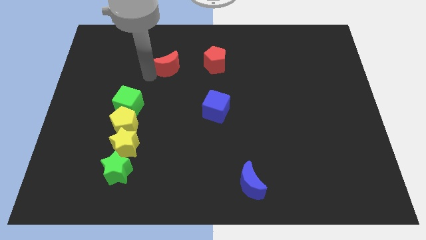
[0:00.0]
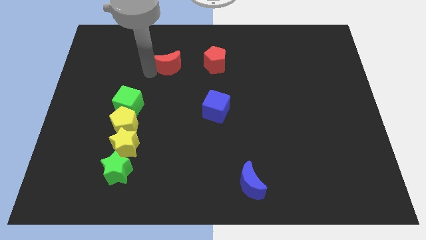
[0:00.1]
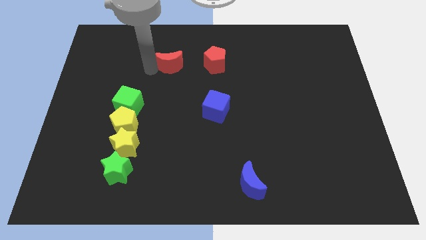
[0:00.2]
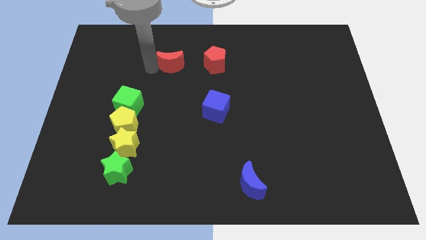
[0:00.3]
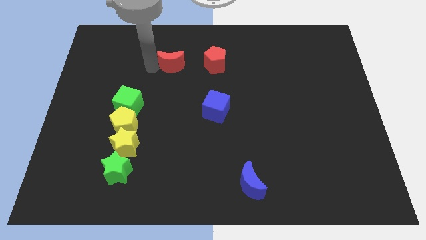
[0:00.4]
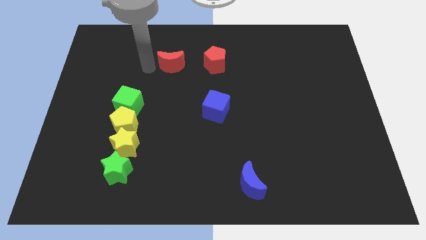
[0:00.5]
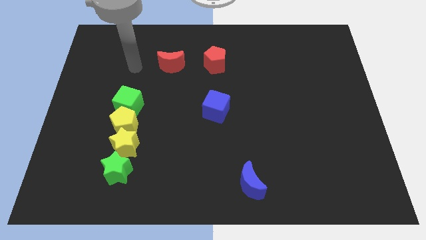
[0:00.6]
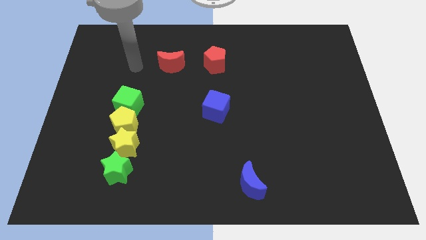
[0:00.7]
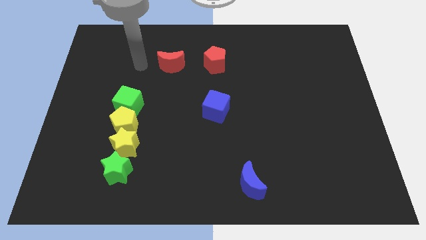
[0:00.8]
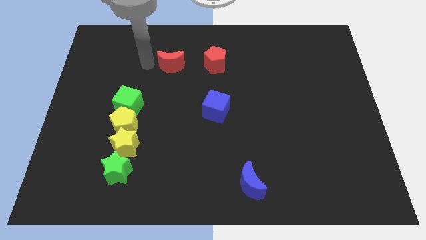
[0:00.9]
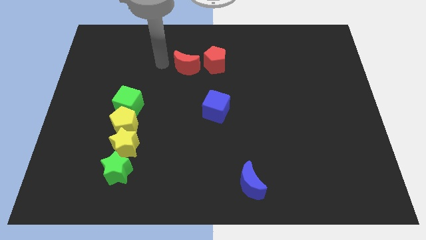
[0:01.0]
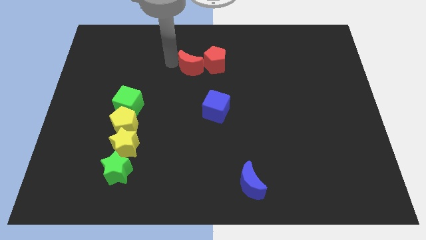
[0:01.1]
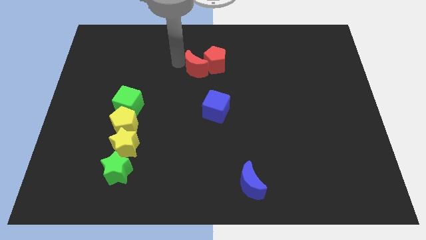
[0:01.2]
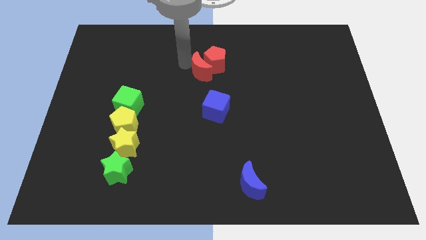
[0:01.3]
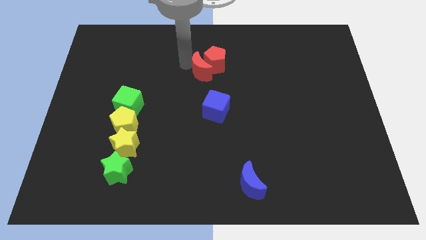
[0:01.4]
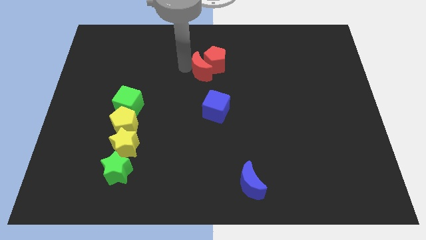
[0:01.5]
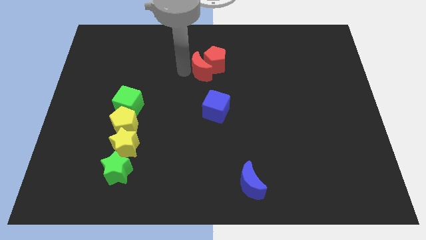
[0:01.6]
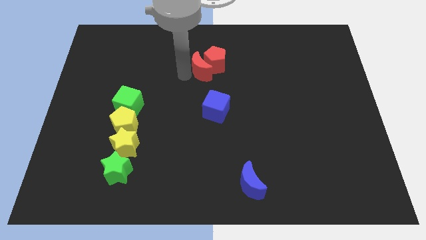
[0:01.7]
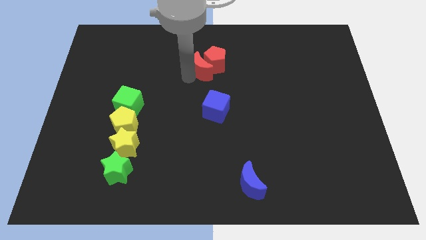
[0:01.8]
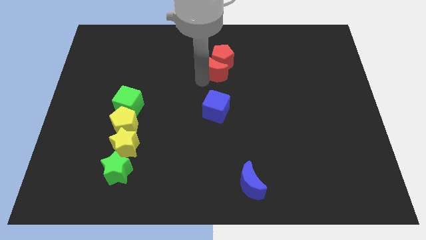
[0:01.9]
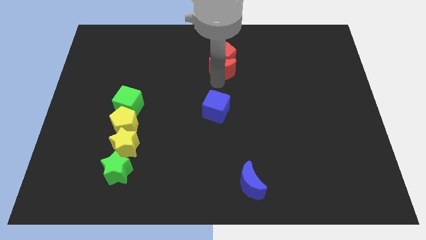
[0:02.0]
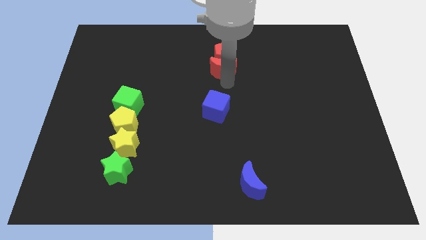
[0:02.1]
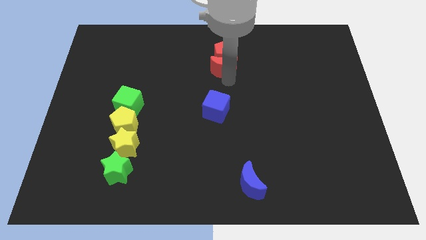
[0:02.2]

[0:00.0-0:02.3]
push the red crescent into red pentagon

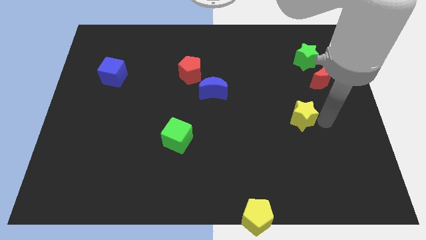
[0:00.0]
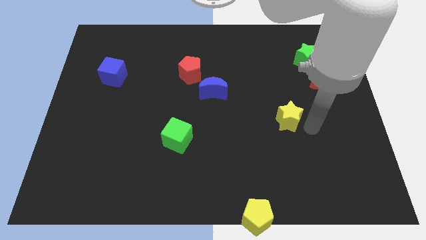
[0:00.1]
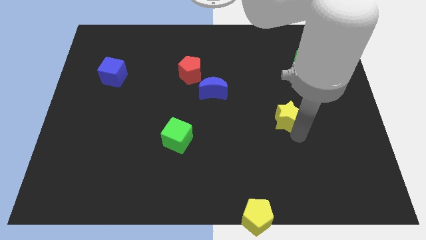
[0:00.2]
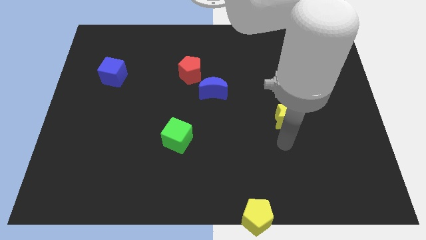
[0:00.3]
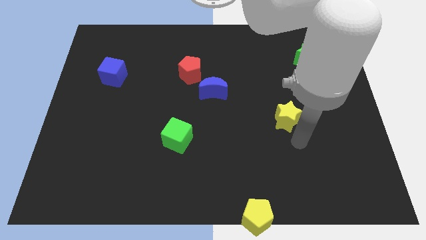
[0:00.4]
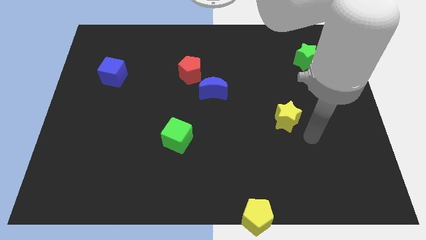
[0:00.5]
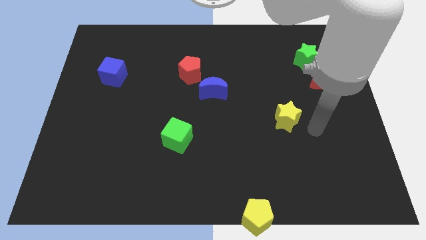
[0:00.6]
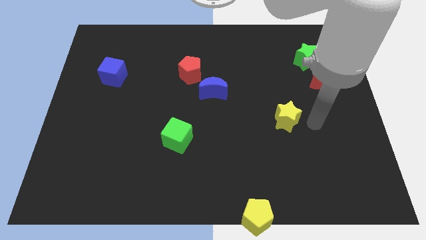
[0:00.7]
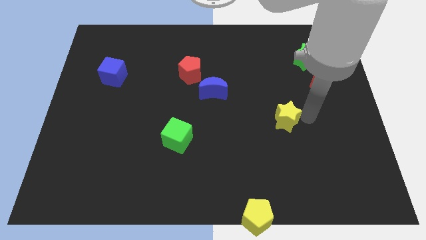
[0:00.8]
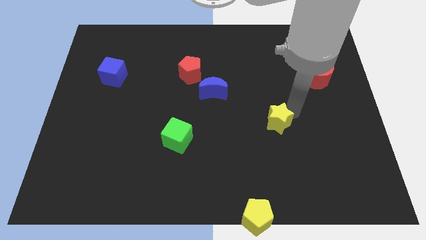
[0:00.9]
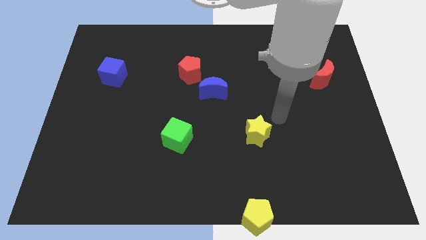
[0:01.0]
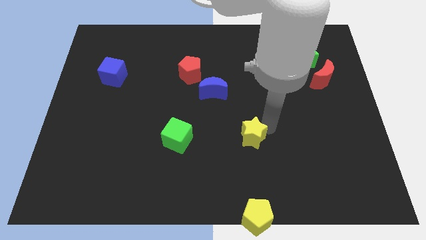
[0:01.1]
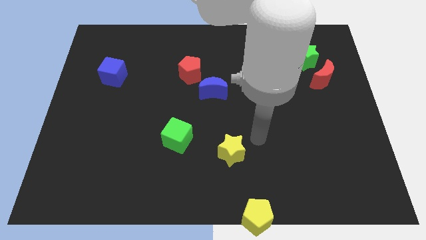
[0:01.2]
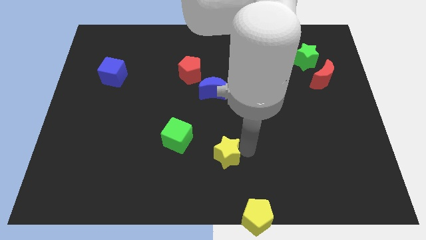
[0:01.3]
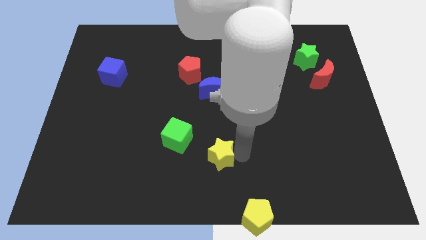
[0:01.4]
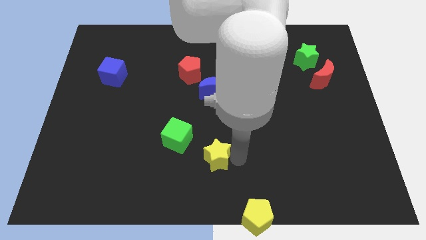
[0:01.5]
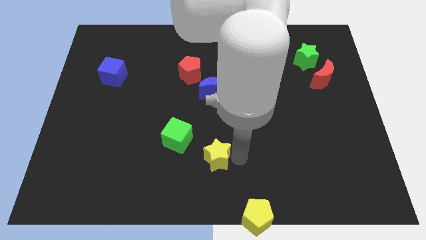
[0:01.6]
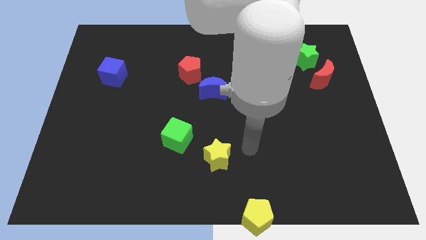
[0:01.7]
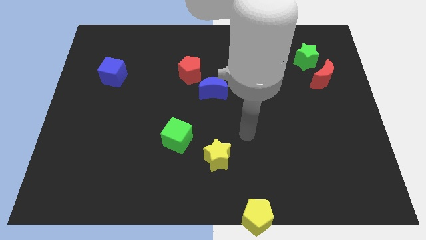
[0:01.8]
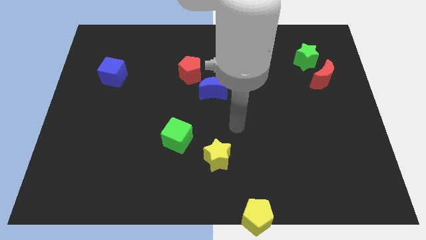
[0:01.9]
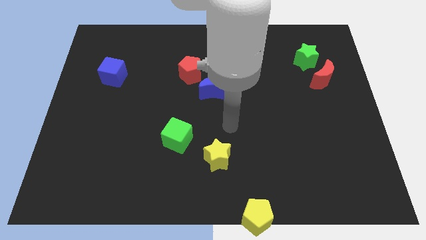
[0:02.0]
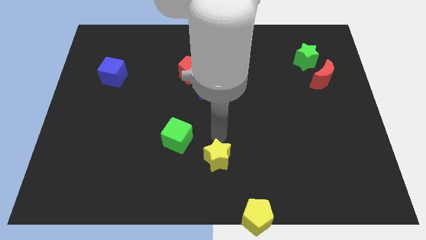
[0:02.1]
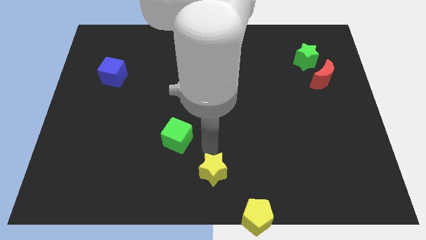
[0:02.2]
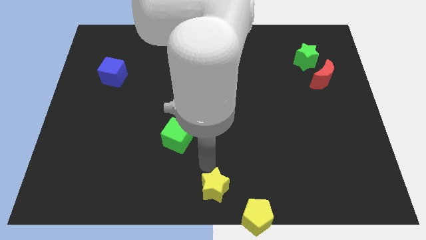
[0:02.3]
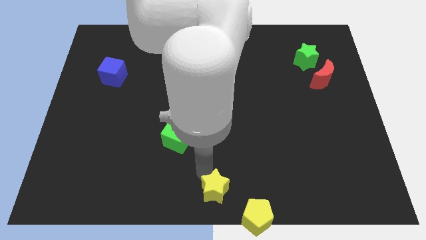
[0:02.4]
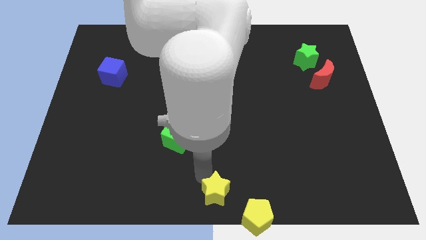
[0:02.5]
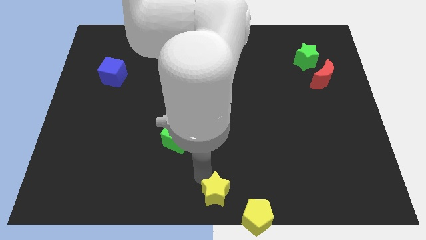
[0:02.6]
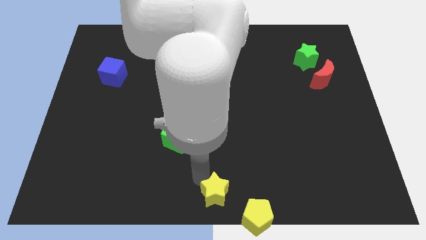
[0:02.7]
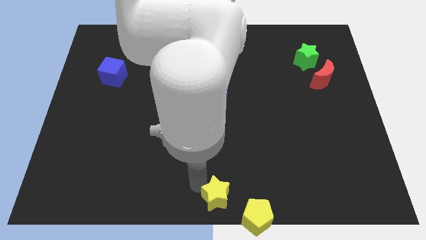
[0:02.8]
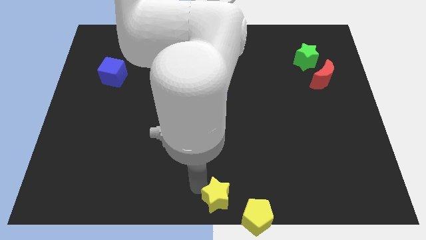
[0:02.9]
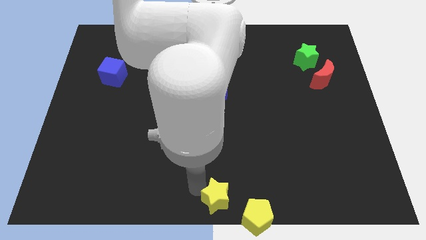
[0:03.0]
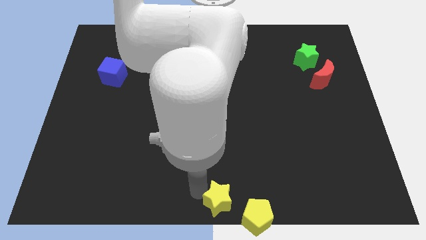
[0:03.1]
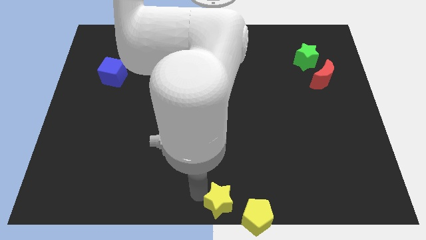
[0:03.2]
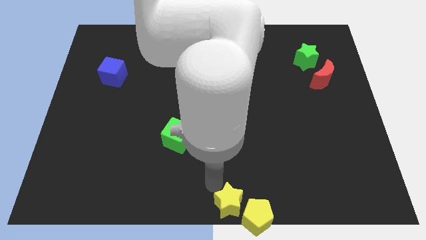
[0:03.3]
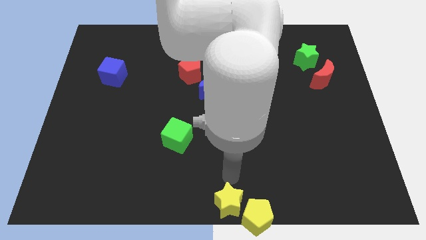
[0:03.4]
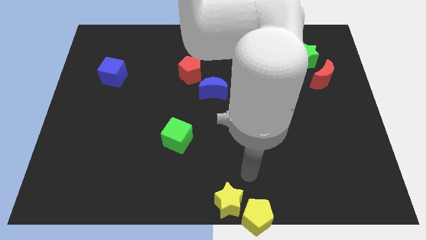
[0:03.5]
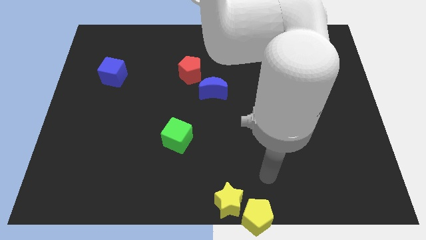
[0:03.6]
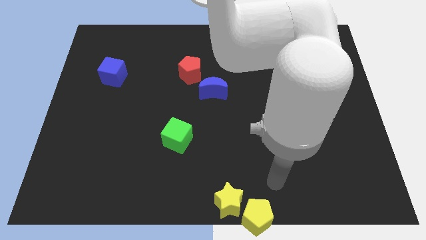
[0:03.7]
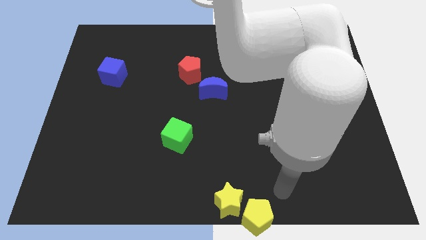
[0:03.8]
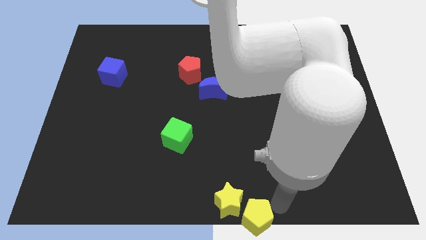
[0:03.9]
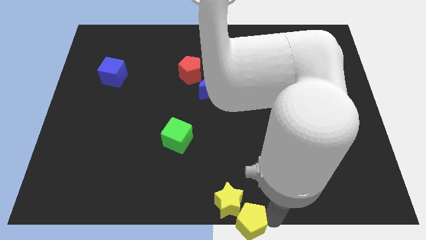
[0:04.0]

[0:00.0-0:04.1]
slide yellow star into yellow pentagon

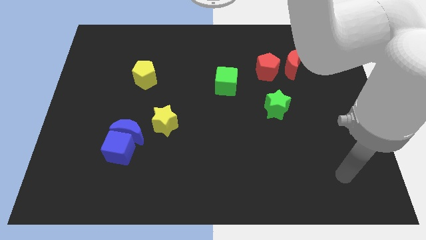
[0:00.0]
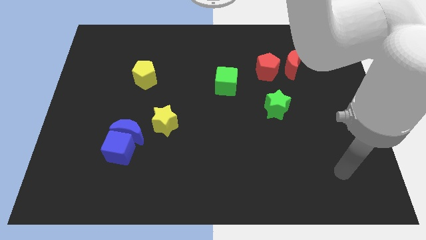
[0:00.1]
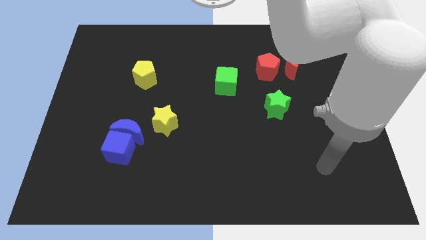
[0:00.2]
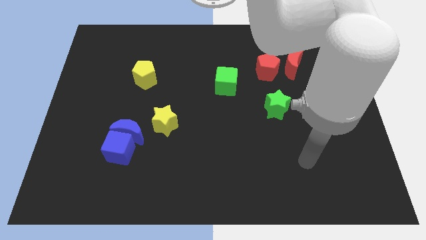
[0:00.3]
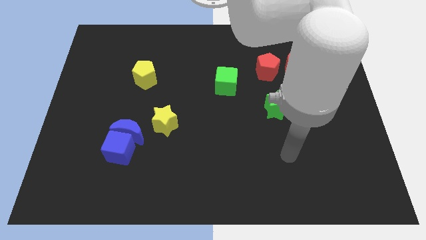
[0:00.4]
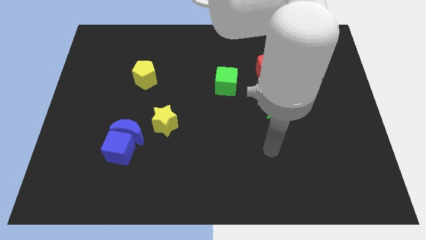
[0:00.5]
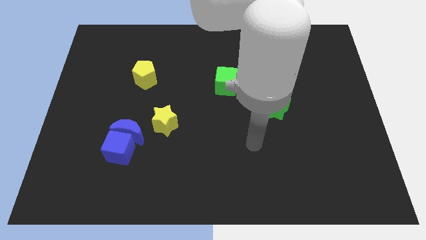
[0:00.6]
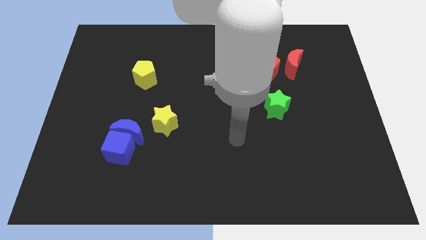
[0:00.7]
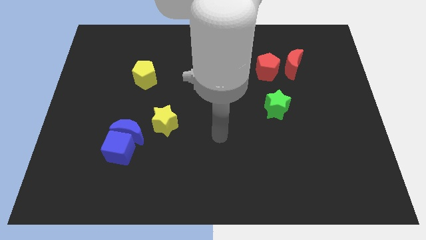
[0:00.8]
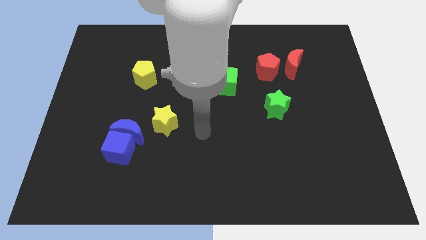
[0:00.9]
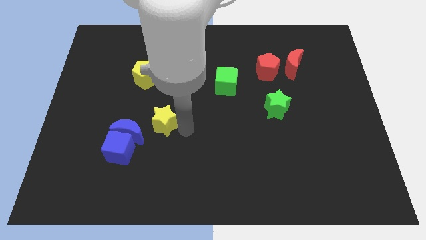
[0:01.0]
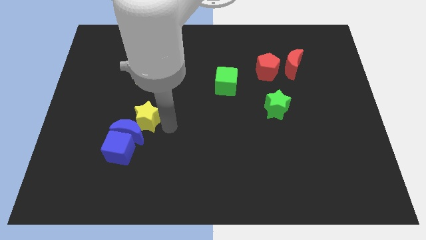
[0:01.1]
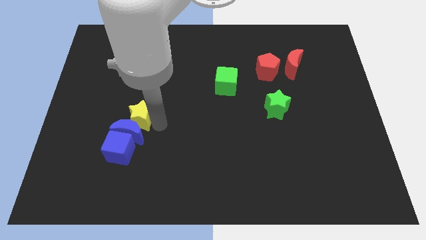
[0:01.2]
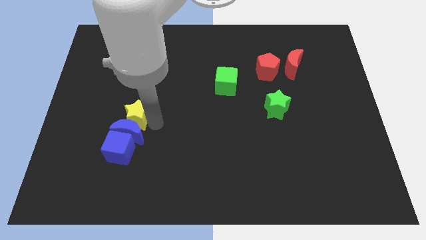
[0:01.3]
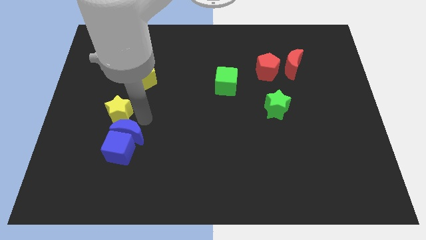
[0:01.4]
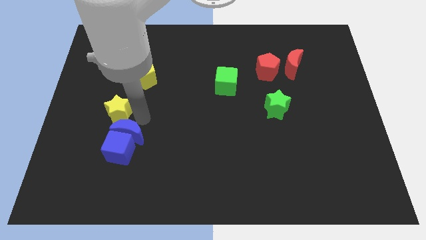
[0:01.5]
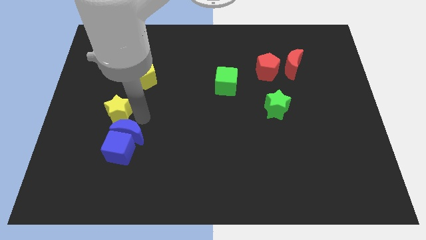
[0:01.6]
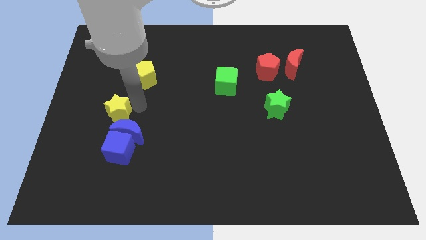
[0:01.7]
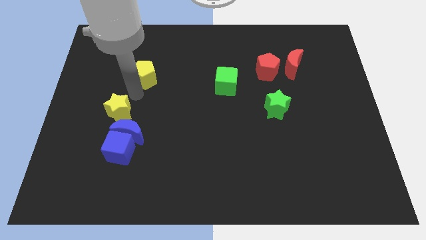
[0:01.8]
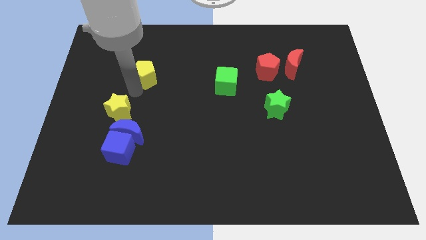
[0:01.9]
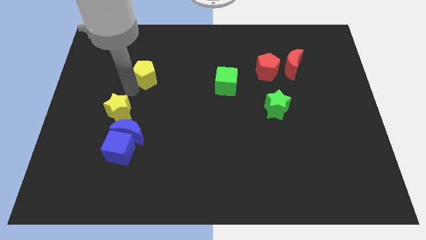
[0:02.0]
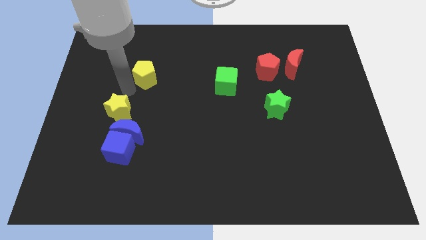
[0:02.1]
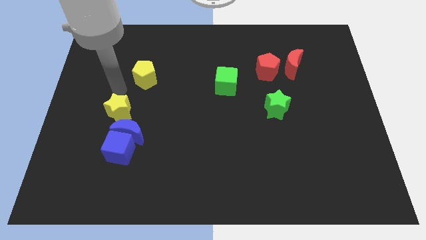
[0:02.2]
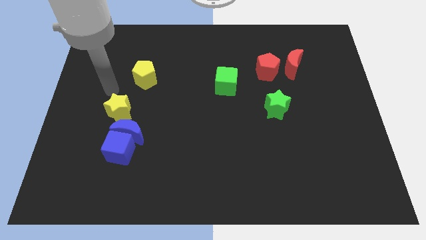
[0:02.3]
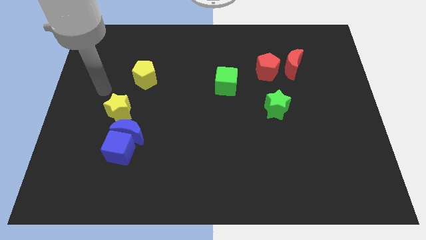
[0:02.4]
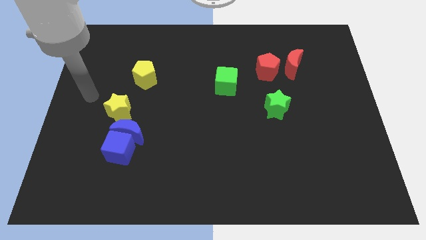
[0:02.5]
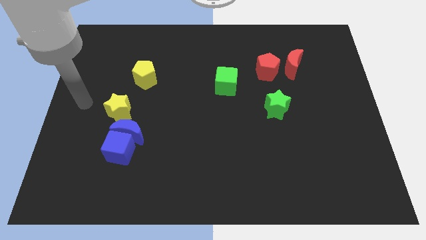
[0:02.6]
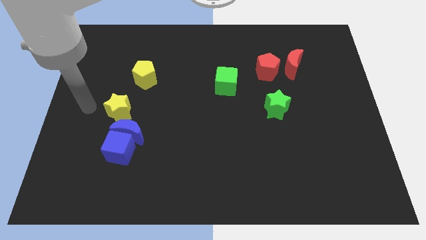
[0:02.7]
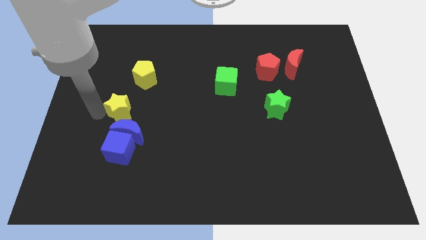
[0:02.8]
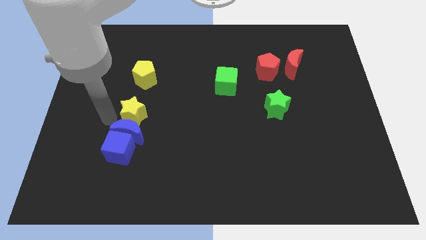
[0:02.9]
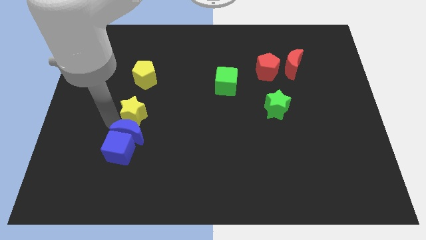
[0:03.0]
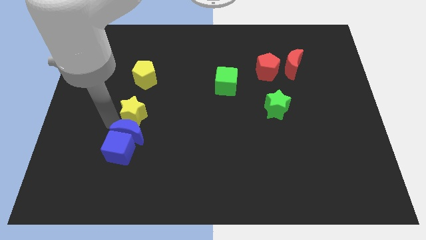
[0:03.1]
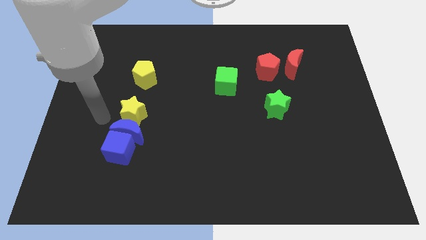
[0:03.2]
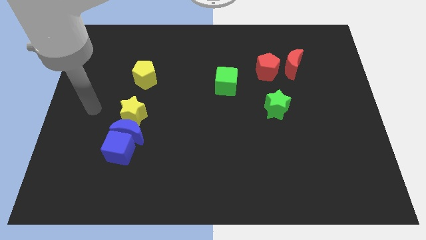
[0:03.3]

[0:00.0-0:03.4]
place the yellow star above the blue moon
